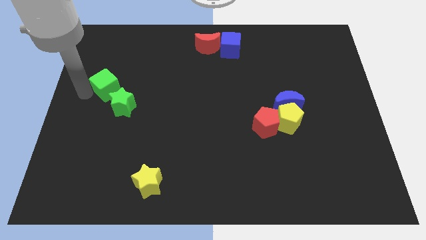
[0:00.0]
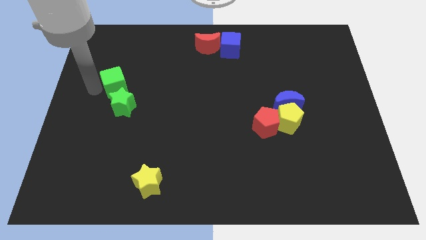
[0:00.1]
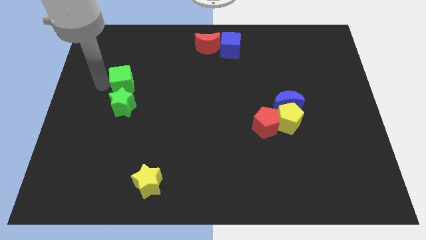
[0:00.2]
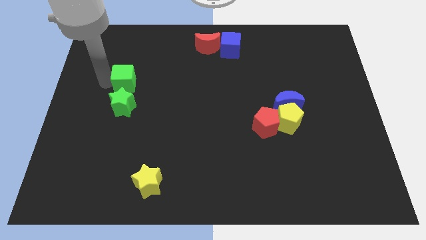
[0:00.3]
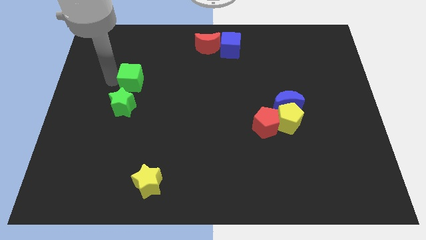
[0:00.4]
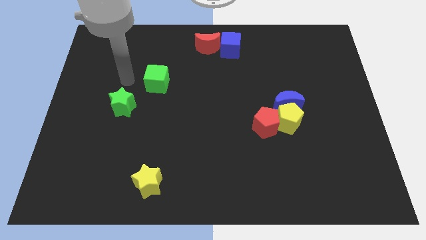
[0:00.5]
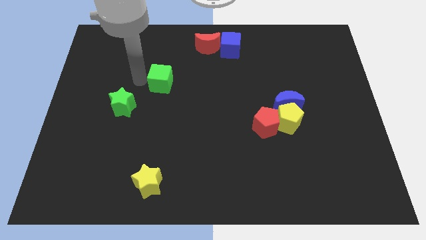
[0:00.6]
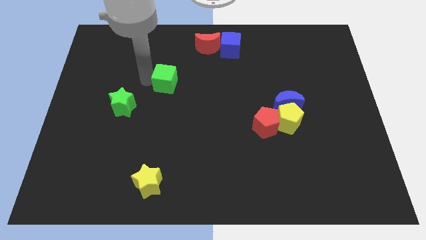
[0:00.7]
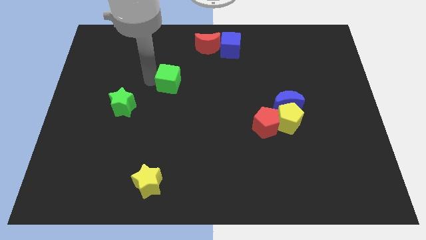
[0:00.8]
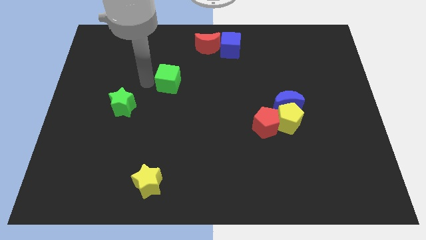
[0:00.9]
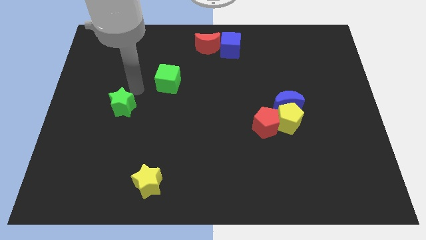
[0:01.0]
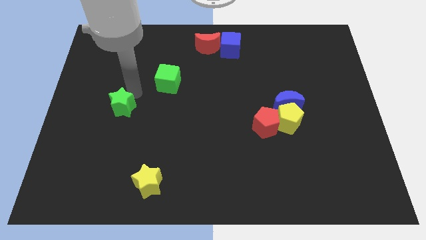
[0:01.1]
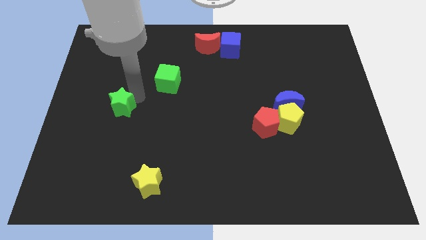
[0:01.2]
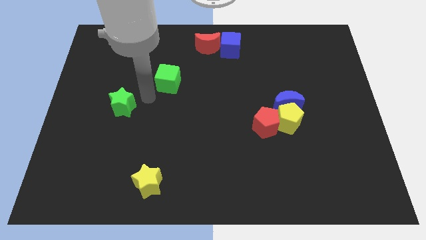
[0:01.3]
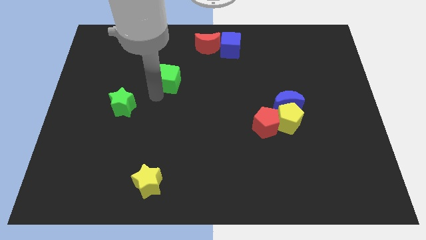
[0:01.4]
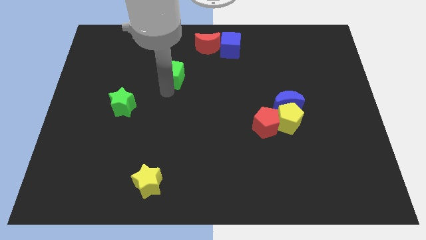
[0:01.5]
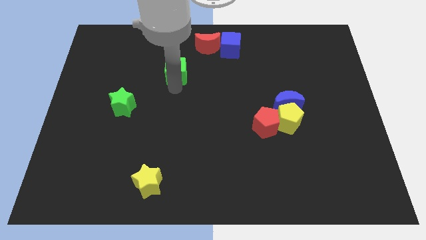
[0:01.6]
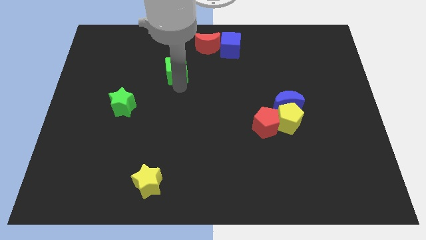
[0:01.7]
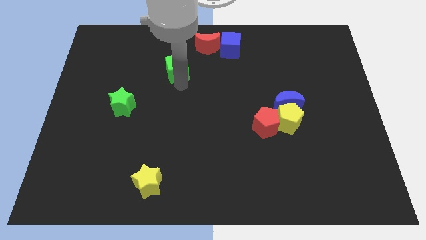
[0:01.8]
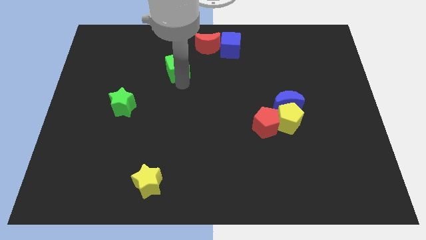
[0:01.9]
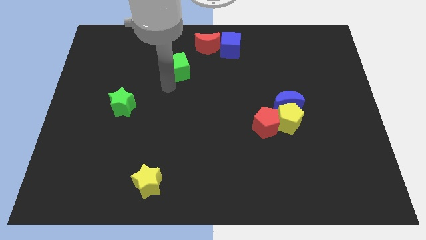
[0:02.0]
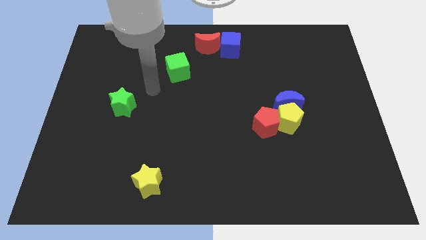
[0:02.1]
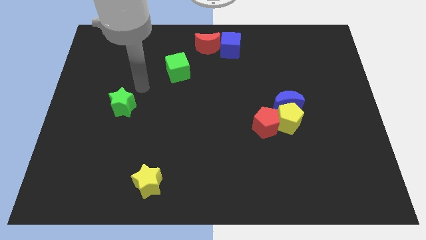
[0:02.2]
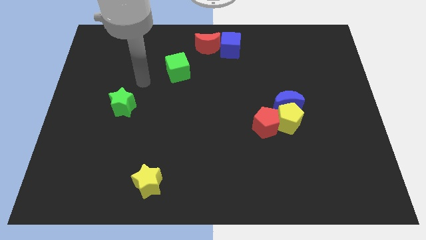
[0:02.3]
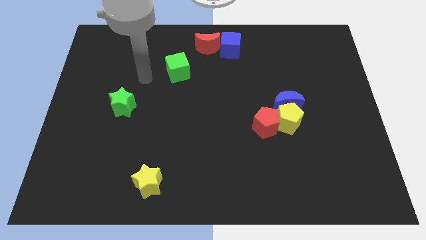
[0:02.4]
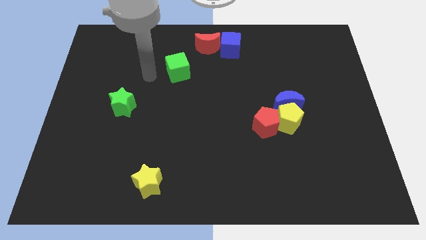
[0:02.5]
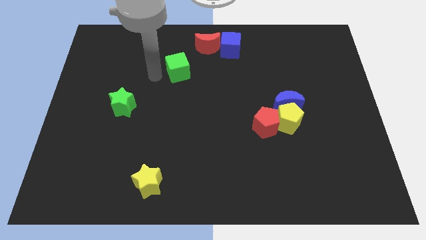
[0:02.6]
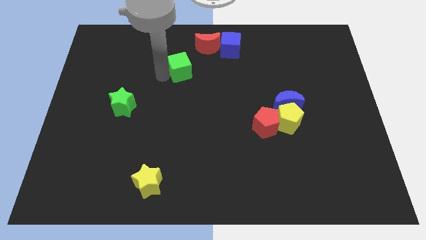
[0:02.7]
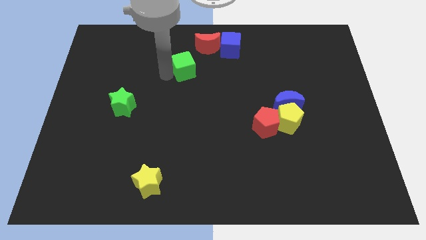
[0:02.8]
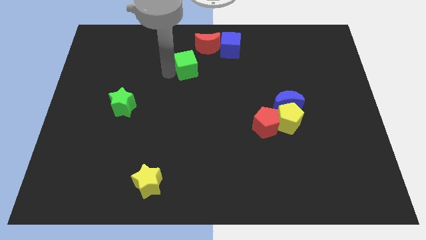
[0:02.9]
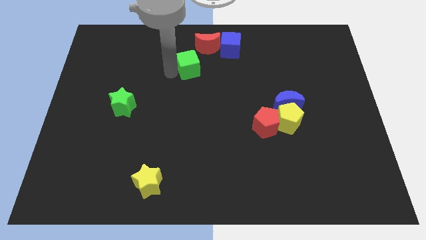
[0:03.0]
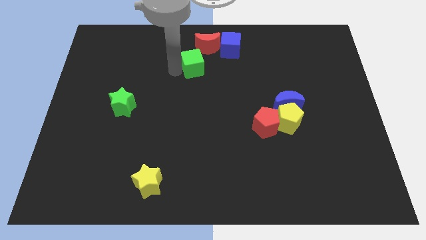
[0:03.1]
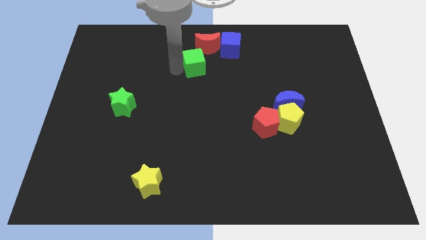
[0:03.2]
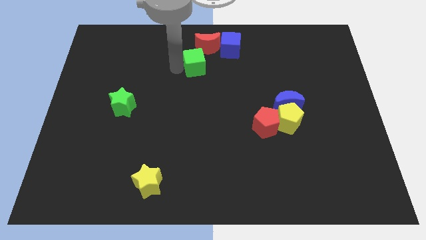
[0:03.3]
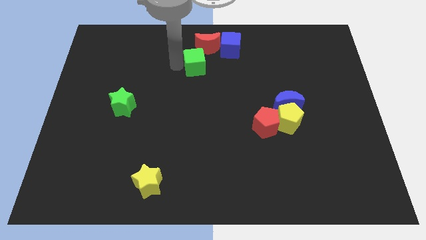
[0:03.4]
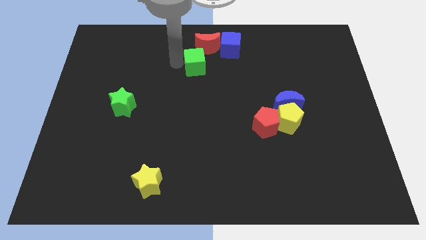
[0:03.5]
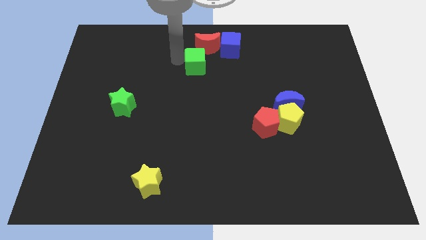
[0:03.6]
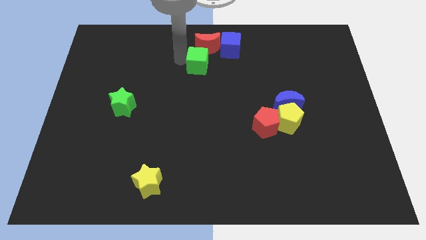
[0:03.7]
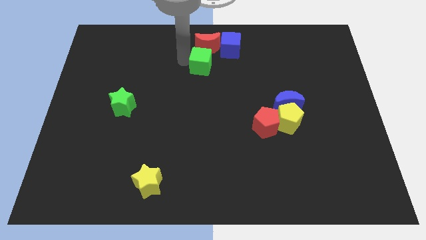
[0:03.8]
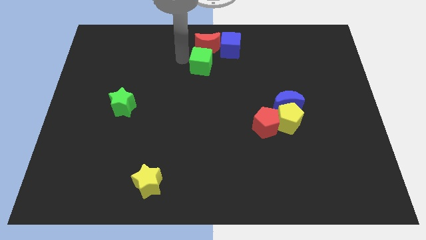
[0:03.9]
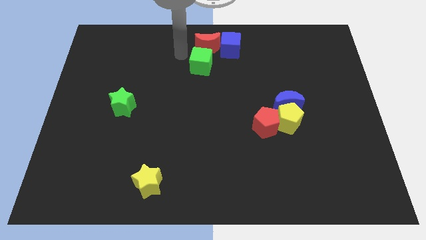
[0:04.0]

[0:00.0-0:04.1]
push green cube below the red moon

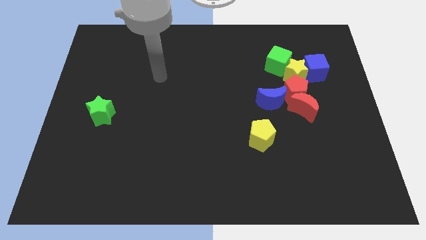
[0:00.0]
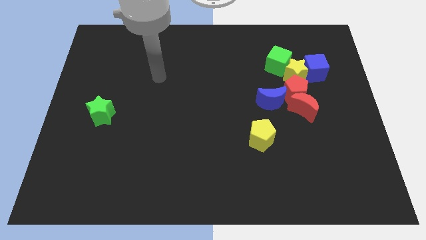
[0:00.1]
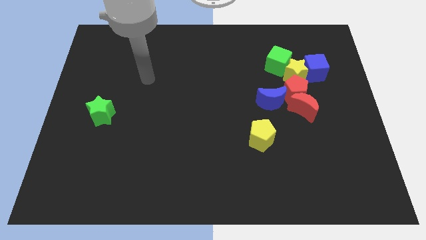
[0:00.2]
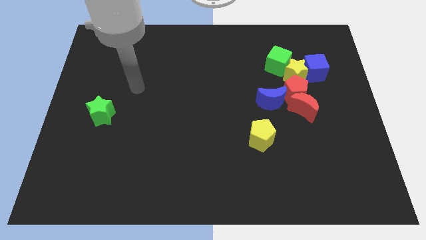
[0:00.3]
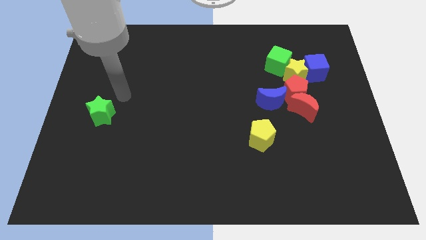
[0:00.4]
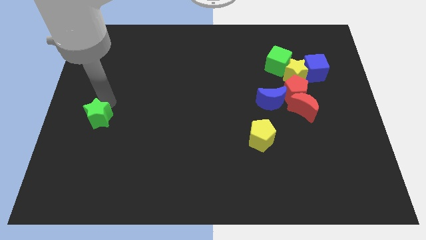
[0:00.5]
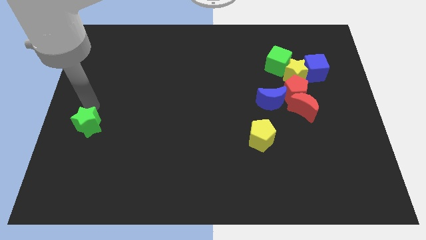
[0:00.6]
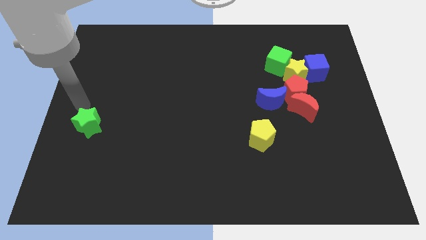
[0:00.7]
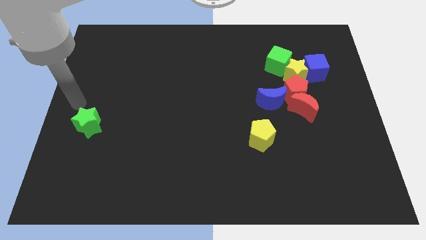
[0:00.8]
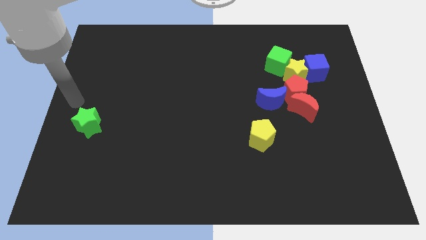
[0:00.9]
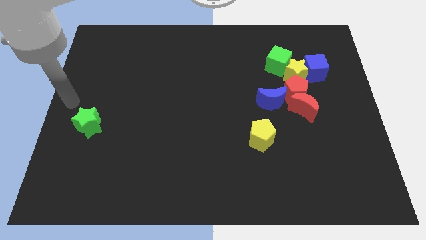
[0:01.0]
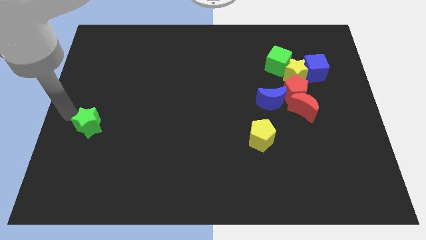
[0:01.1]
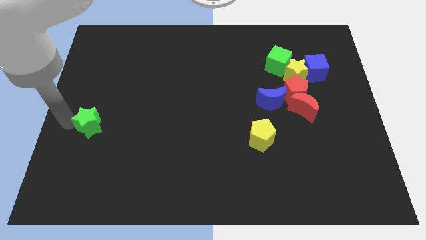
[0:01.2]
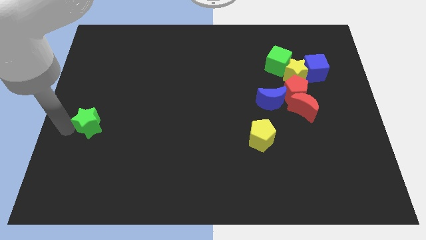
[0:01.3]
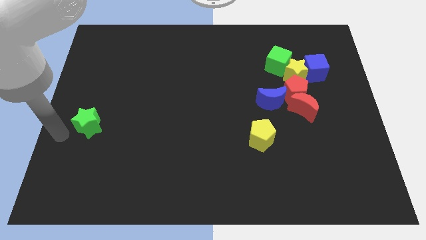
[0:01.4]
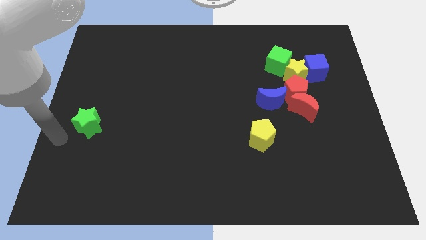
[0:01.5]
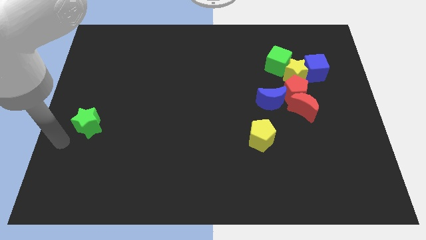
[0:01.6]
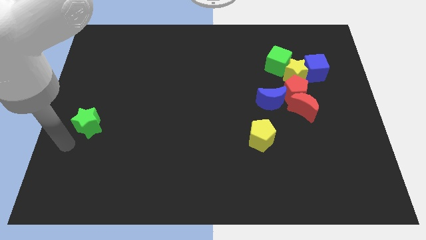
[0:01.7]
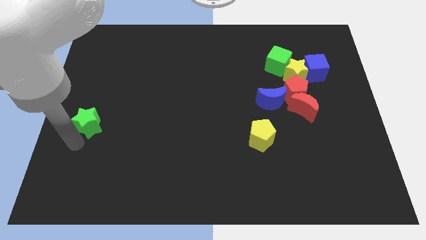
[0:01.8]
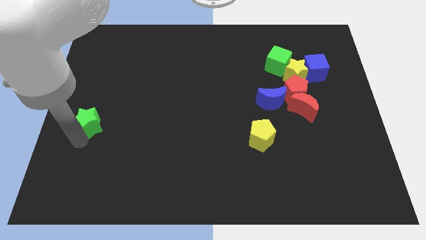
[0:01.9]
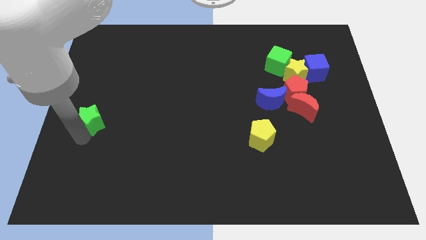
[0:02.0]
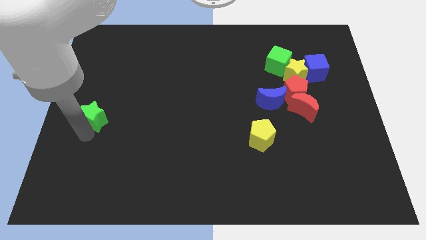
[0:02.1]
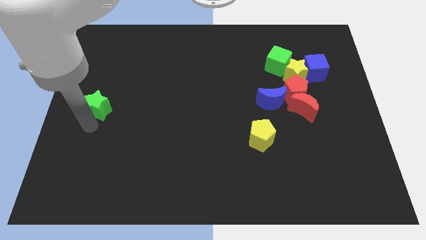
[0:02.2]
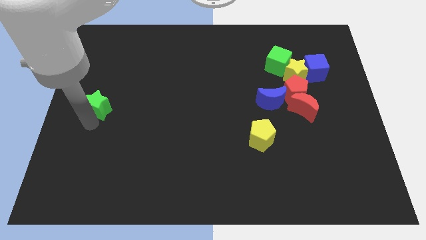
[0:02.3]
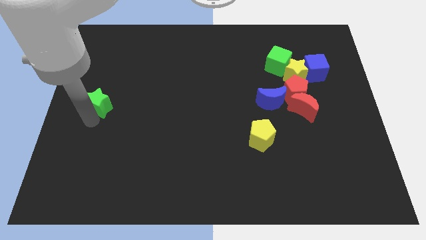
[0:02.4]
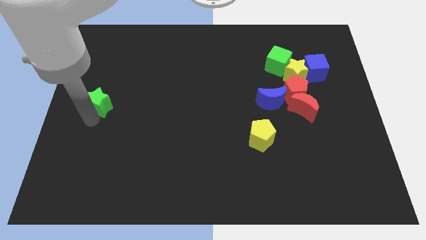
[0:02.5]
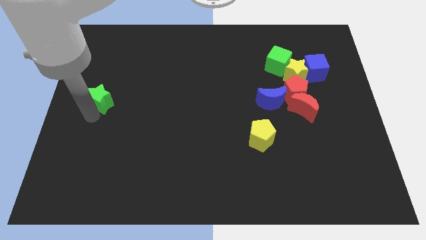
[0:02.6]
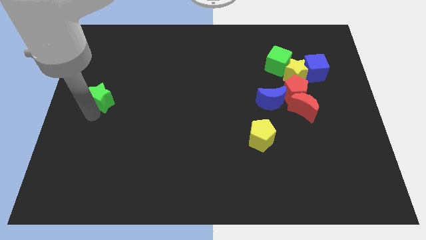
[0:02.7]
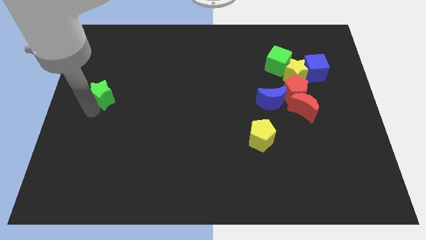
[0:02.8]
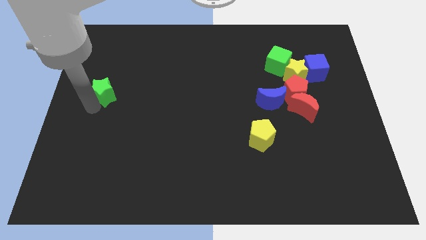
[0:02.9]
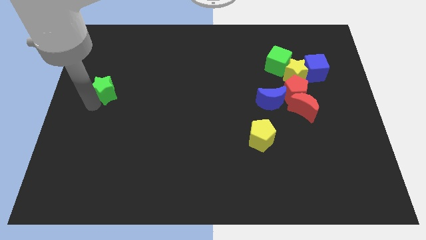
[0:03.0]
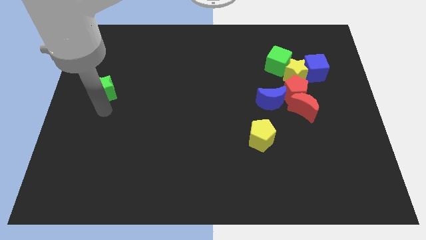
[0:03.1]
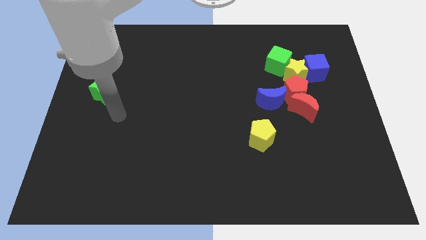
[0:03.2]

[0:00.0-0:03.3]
move the green star towards the left center of the board

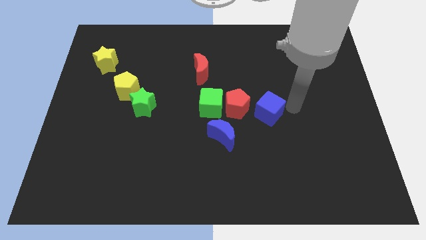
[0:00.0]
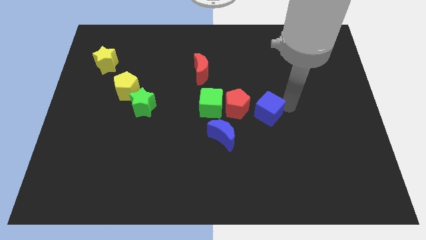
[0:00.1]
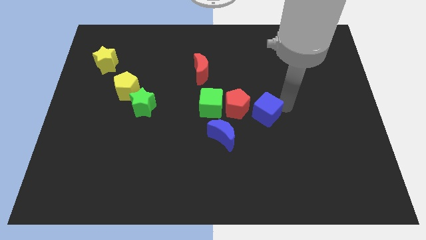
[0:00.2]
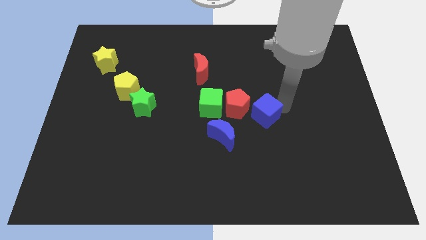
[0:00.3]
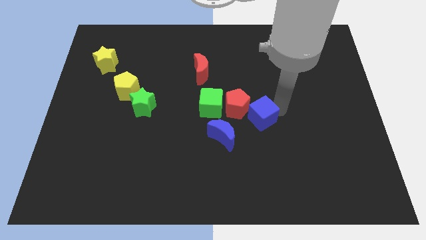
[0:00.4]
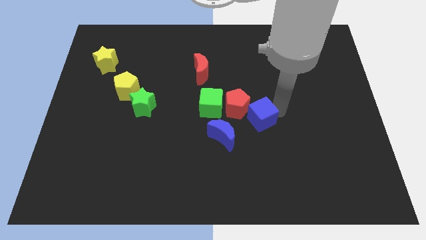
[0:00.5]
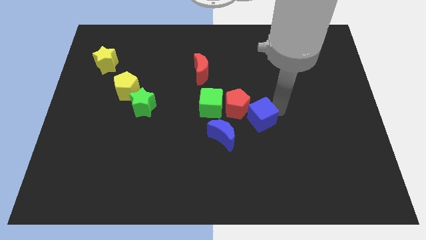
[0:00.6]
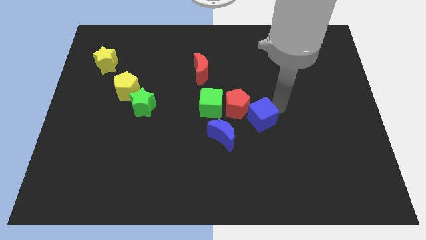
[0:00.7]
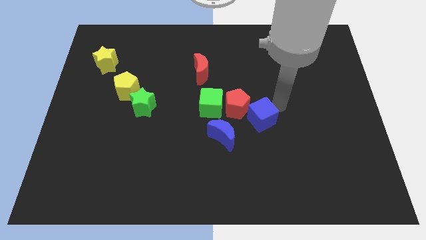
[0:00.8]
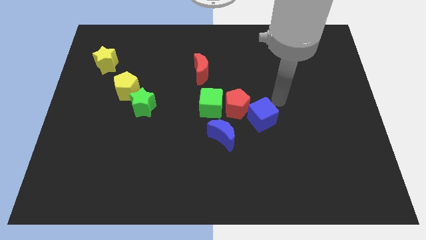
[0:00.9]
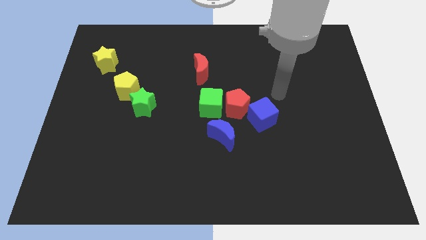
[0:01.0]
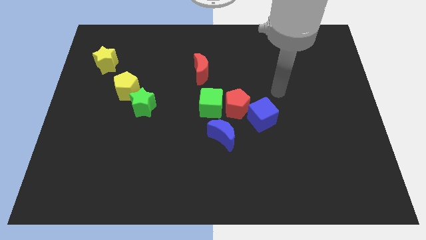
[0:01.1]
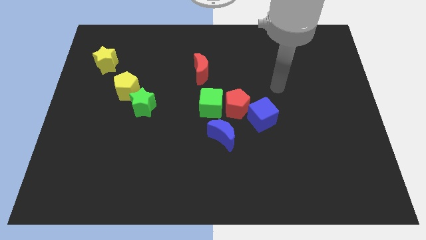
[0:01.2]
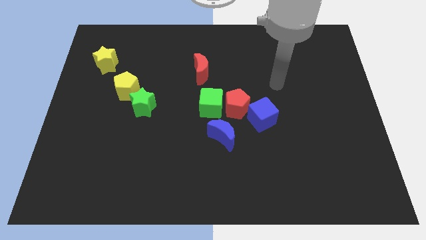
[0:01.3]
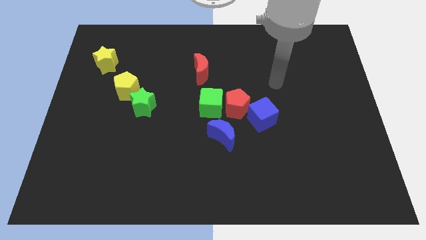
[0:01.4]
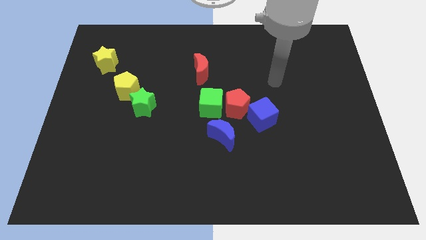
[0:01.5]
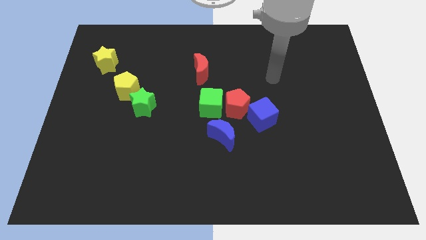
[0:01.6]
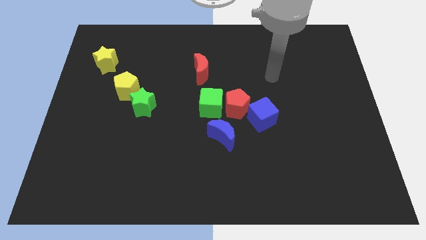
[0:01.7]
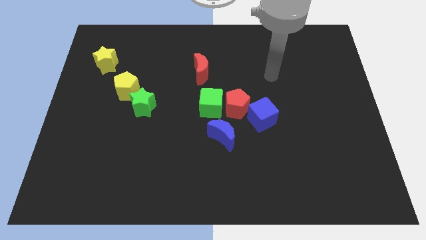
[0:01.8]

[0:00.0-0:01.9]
slide the blue cube diagonally below to the red pentagon
